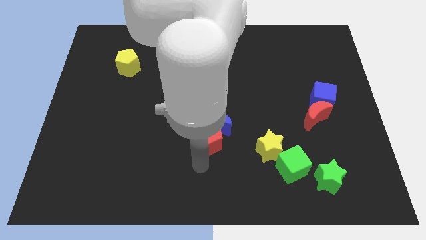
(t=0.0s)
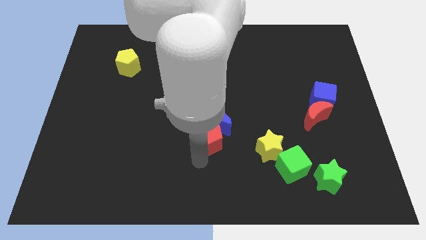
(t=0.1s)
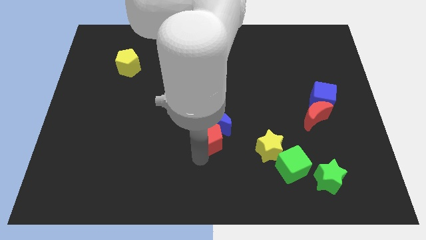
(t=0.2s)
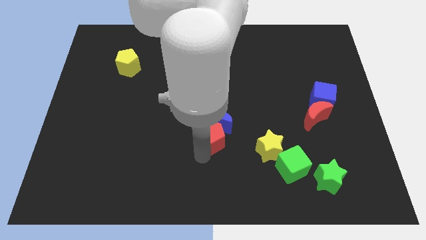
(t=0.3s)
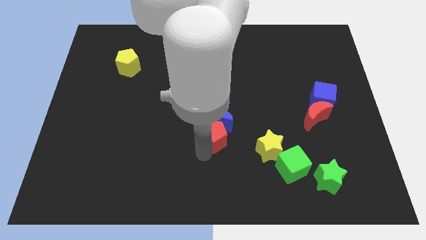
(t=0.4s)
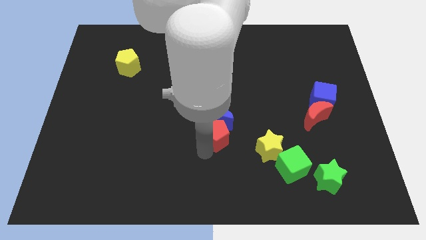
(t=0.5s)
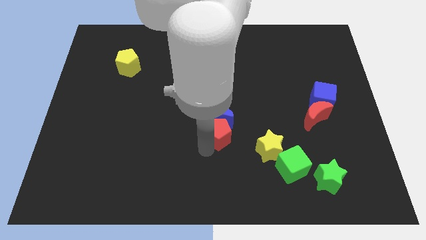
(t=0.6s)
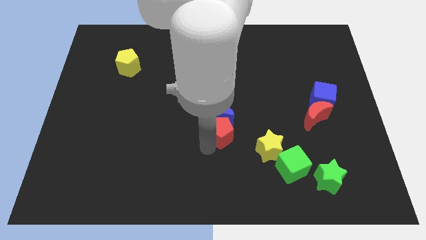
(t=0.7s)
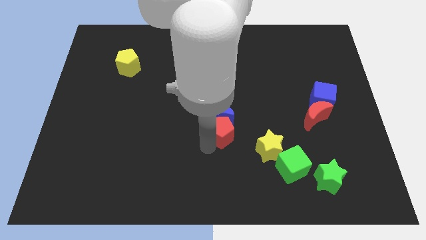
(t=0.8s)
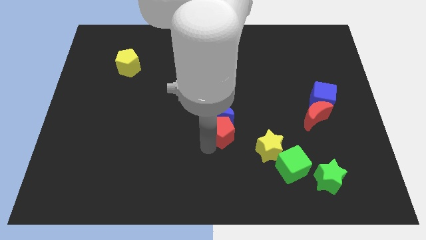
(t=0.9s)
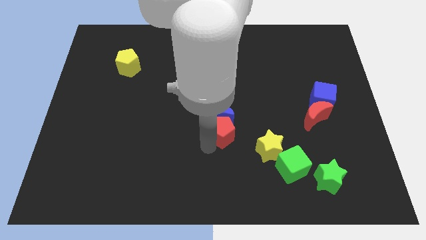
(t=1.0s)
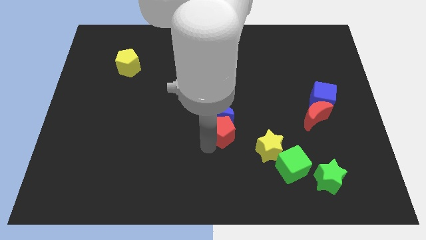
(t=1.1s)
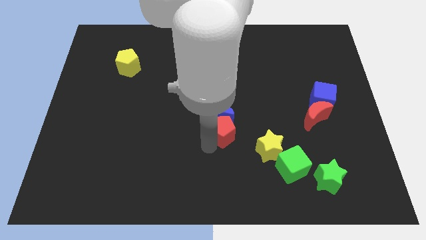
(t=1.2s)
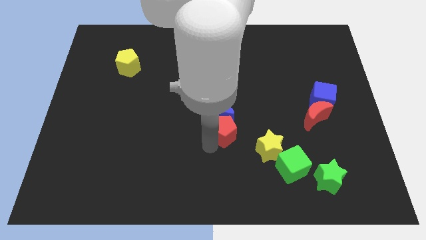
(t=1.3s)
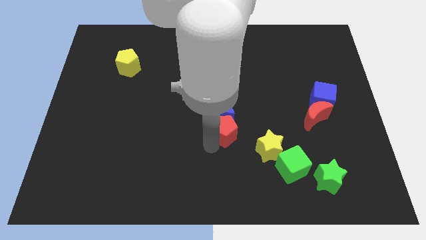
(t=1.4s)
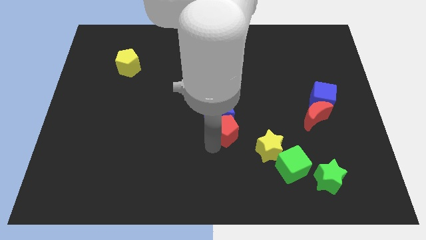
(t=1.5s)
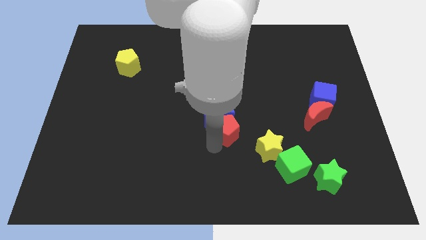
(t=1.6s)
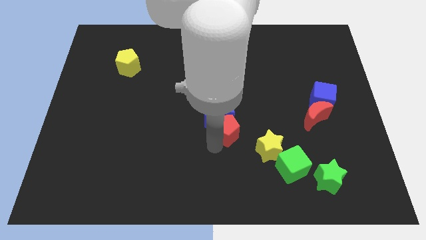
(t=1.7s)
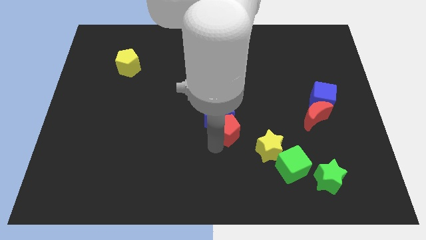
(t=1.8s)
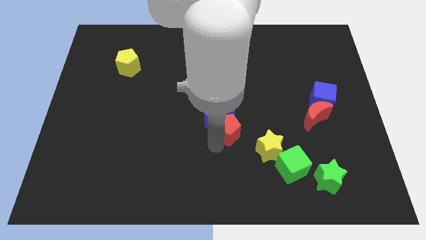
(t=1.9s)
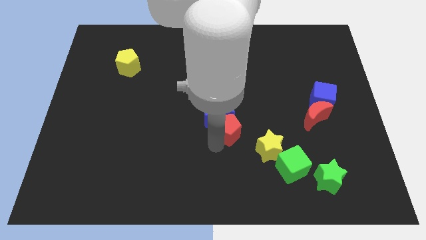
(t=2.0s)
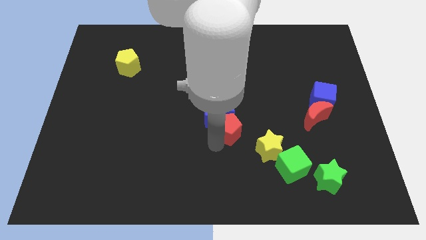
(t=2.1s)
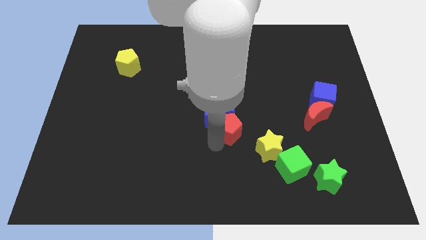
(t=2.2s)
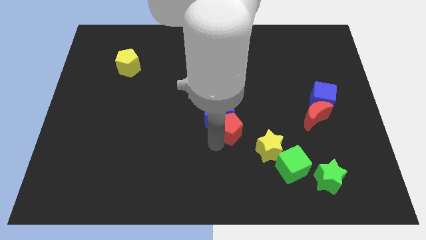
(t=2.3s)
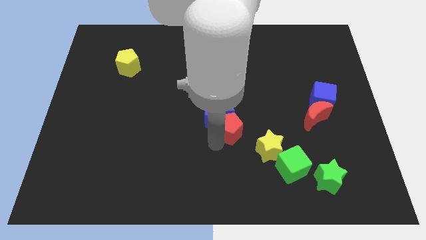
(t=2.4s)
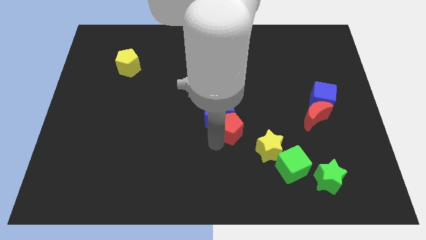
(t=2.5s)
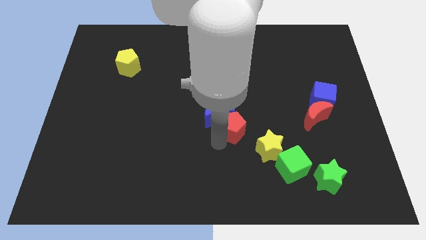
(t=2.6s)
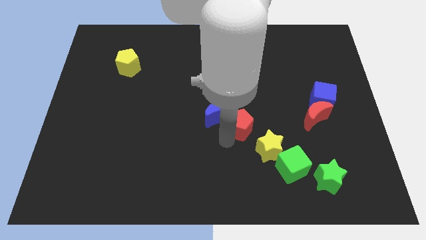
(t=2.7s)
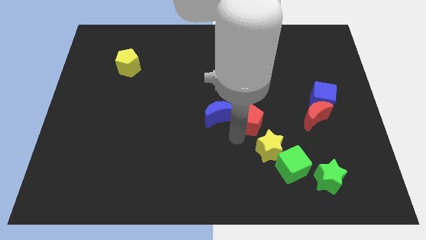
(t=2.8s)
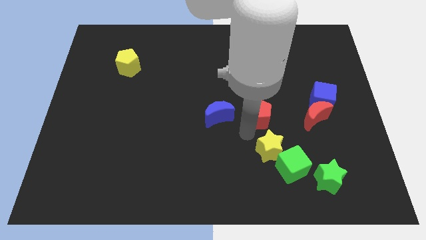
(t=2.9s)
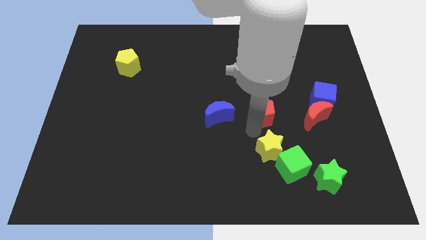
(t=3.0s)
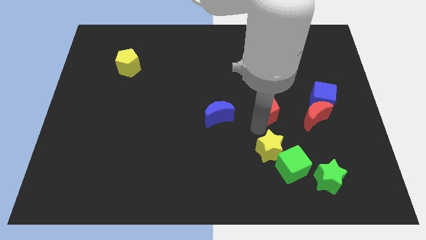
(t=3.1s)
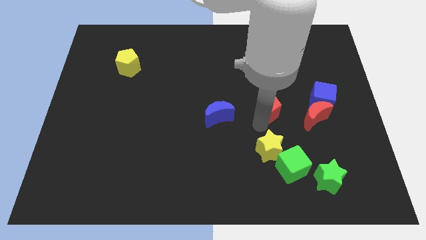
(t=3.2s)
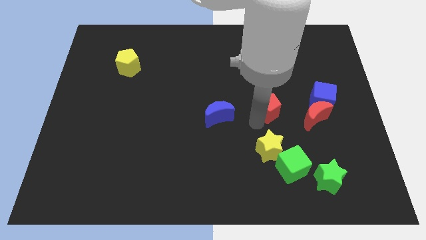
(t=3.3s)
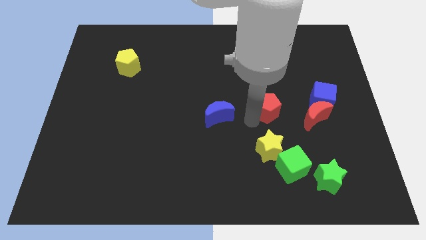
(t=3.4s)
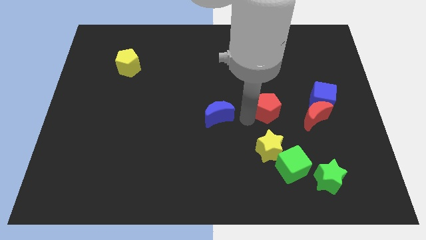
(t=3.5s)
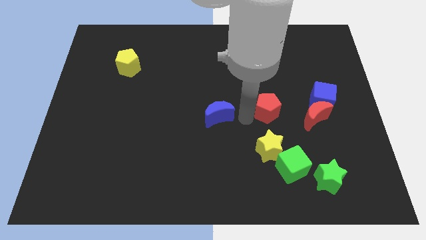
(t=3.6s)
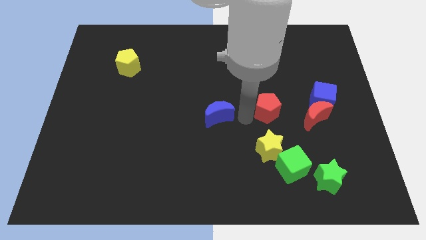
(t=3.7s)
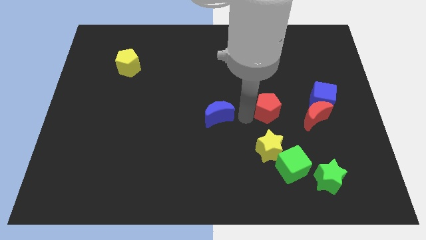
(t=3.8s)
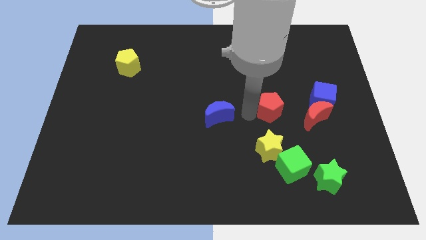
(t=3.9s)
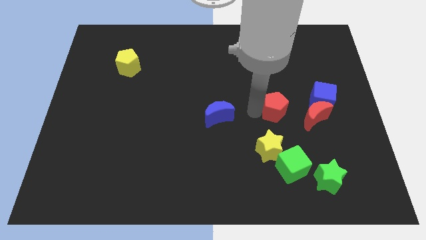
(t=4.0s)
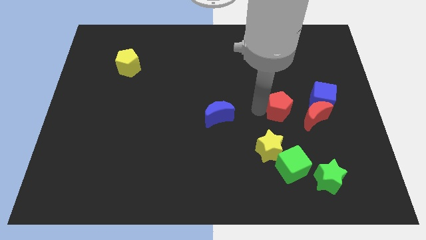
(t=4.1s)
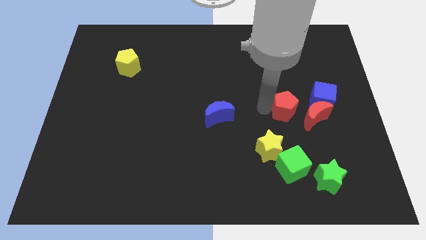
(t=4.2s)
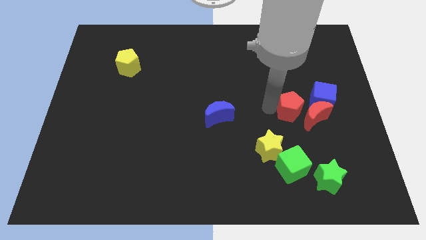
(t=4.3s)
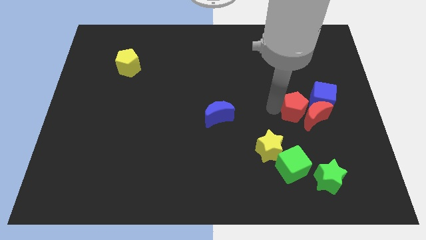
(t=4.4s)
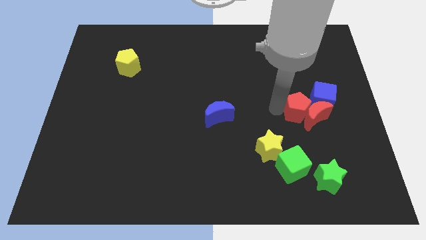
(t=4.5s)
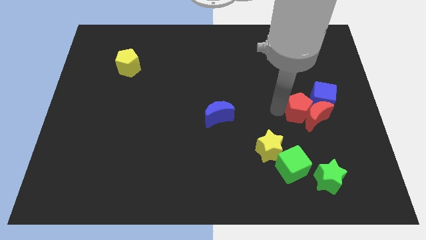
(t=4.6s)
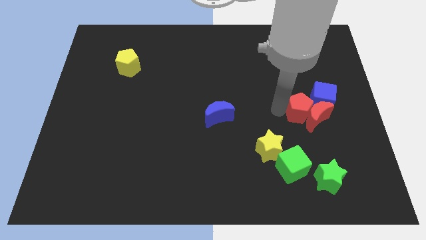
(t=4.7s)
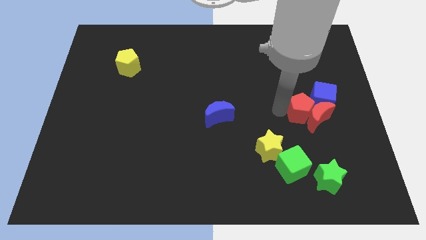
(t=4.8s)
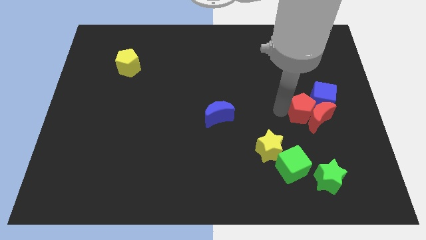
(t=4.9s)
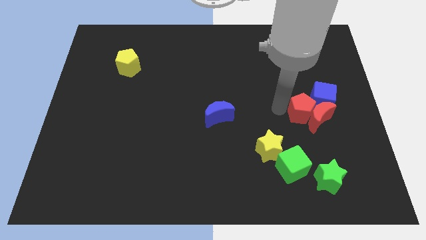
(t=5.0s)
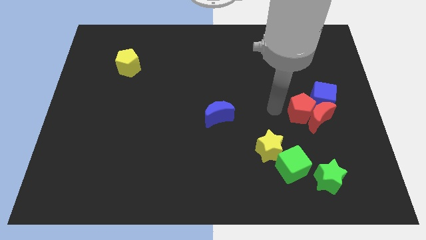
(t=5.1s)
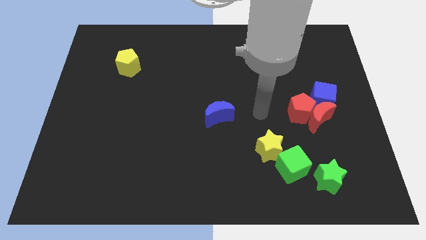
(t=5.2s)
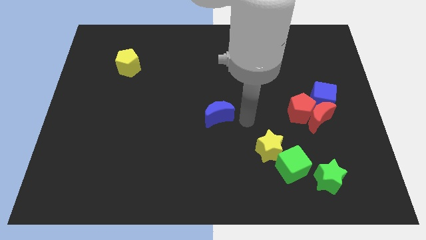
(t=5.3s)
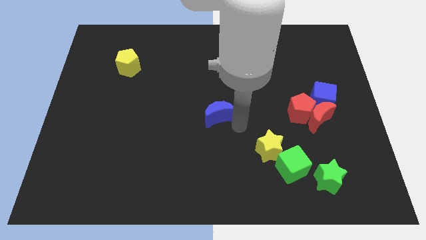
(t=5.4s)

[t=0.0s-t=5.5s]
place the red pentagon into the red crescent

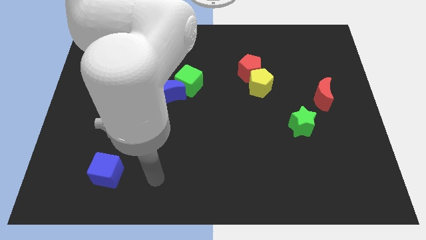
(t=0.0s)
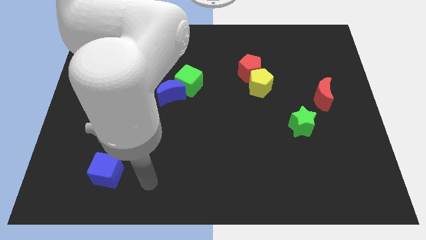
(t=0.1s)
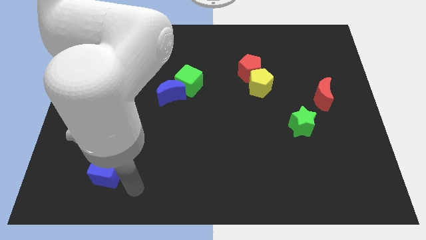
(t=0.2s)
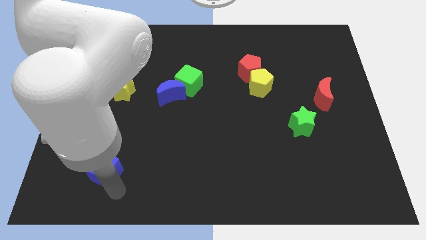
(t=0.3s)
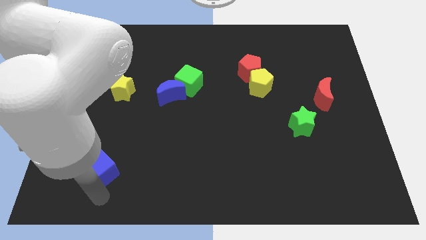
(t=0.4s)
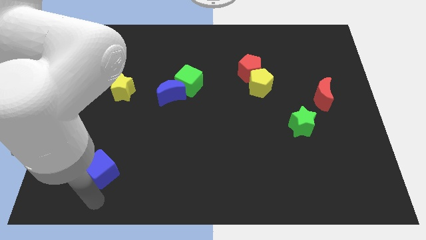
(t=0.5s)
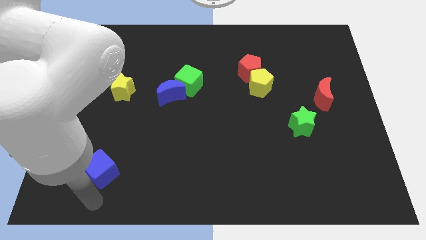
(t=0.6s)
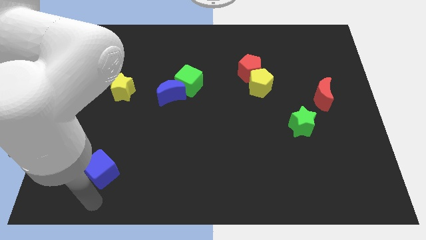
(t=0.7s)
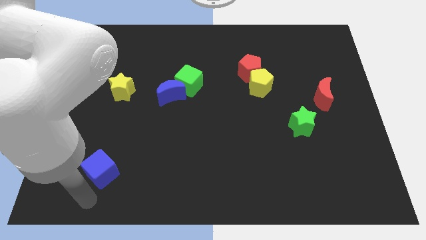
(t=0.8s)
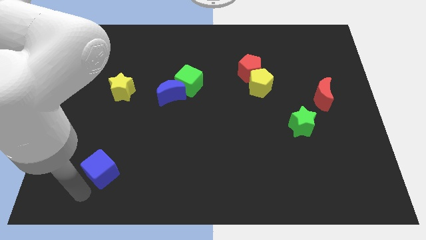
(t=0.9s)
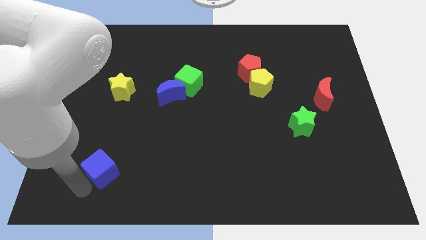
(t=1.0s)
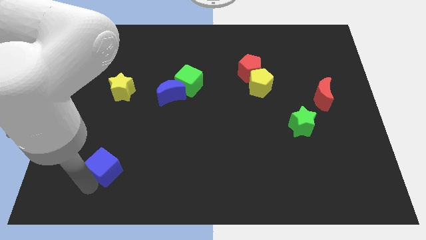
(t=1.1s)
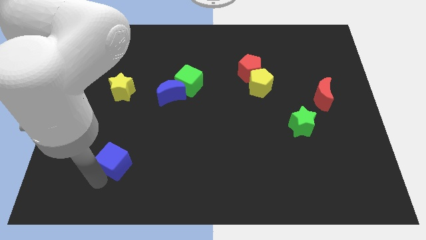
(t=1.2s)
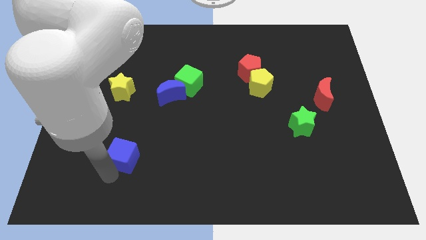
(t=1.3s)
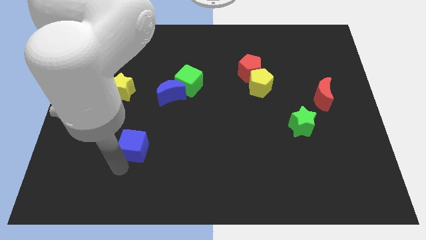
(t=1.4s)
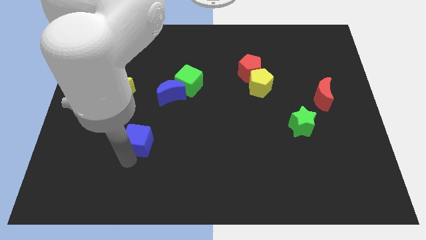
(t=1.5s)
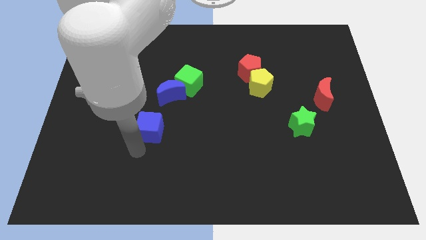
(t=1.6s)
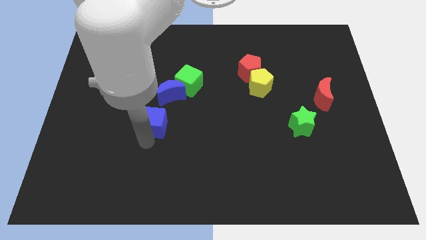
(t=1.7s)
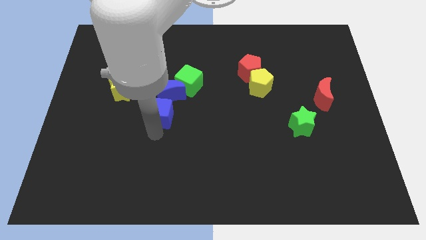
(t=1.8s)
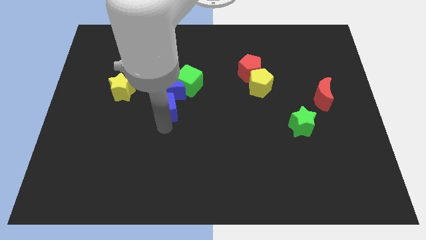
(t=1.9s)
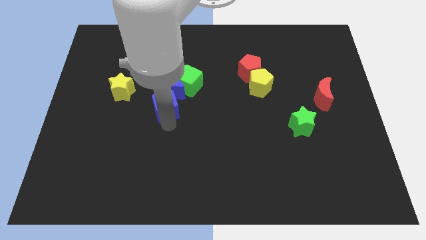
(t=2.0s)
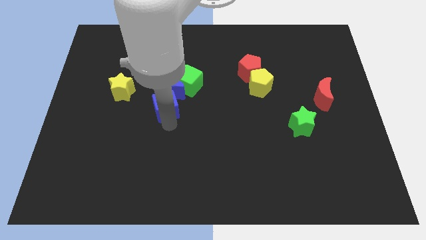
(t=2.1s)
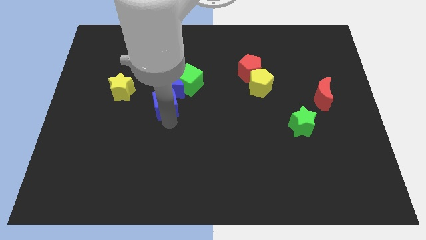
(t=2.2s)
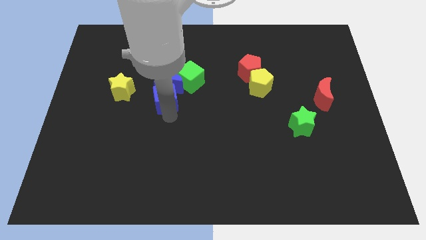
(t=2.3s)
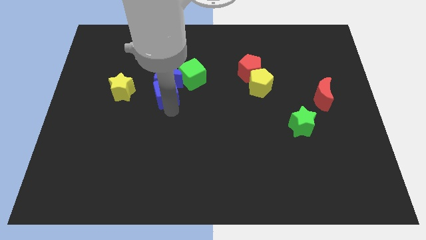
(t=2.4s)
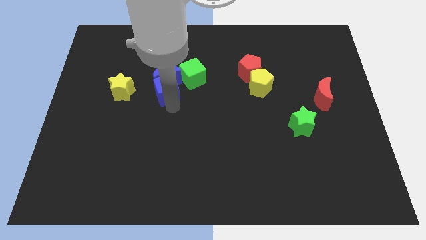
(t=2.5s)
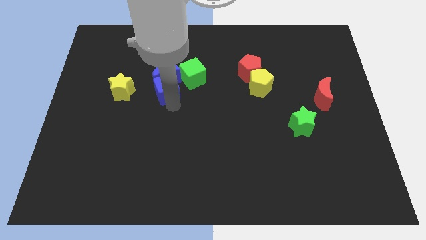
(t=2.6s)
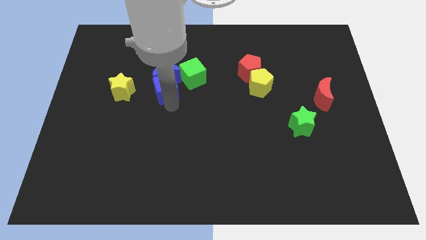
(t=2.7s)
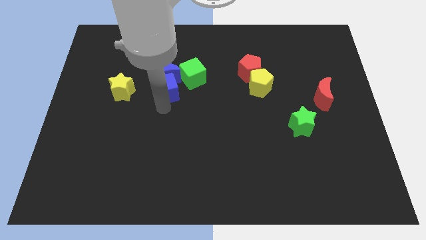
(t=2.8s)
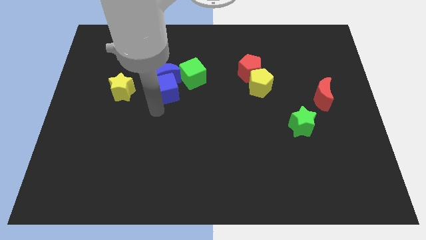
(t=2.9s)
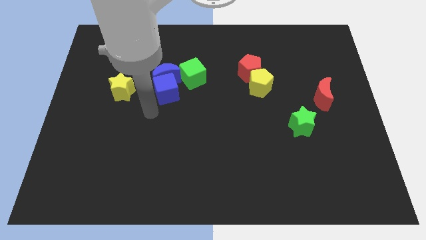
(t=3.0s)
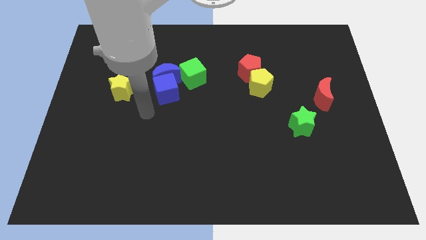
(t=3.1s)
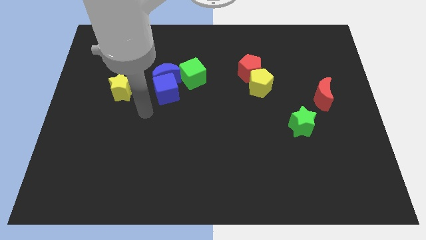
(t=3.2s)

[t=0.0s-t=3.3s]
slide the blue cube parallel right to the yellow star
